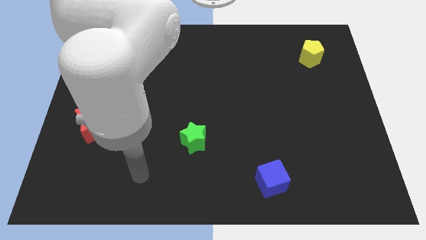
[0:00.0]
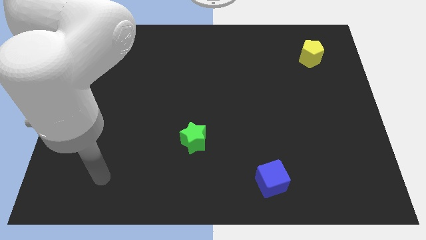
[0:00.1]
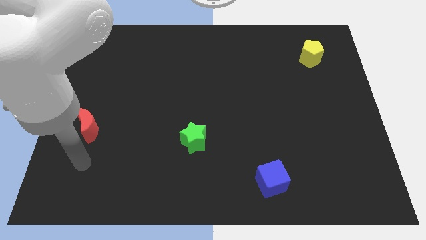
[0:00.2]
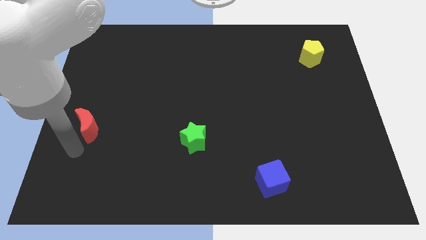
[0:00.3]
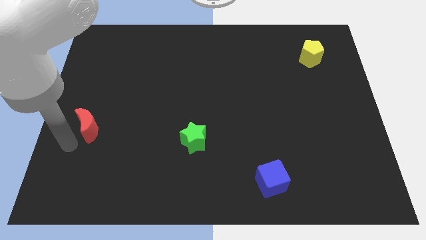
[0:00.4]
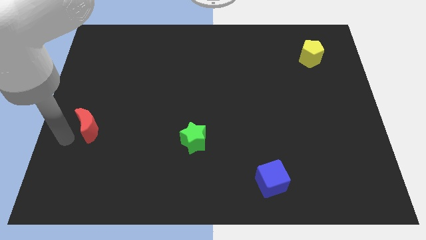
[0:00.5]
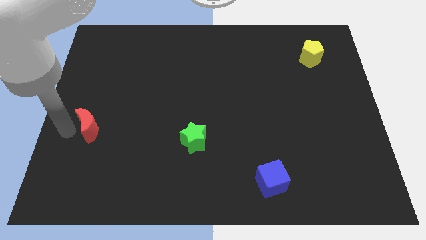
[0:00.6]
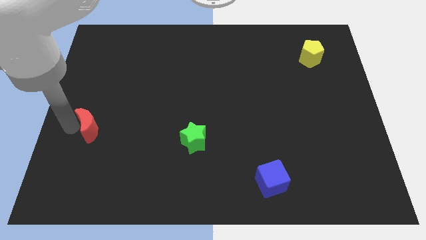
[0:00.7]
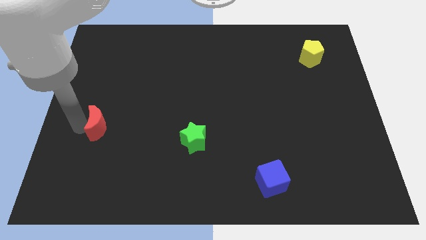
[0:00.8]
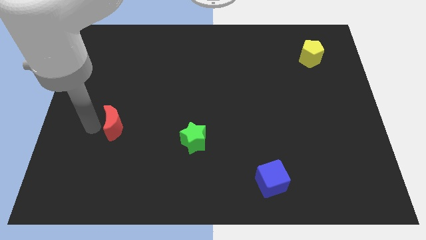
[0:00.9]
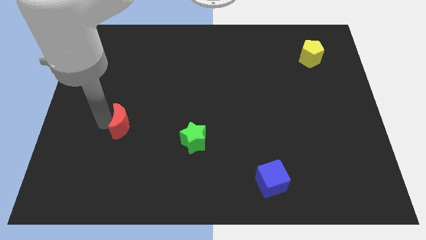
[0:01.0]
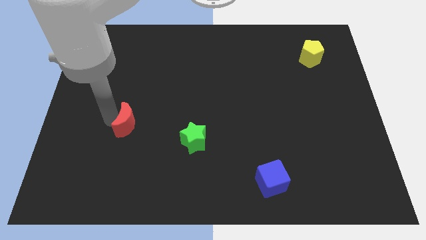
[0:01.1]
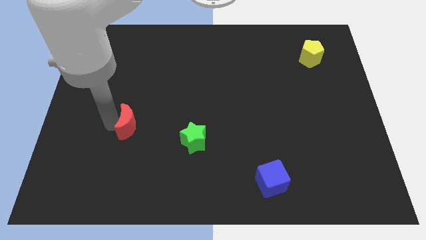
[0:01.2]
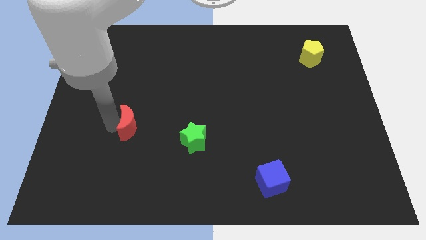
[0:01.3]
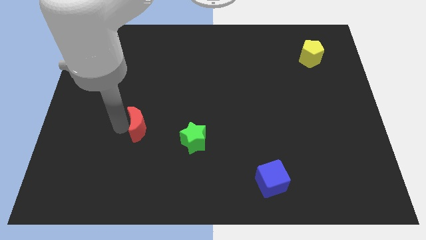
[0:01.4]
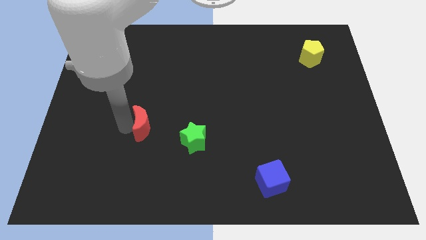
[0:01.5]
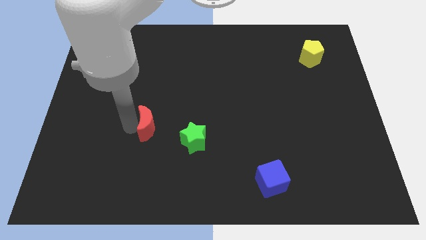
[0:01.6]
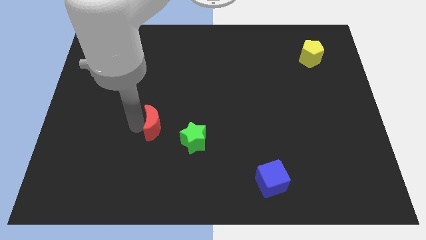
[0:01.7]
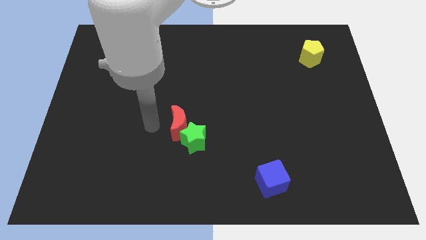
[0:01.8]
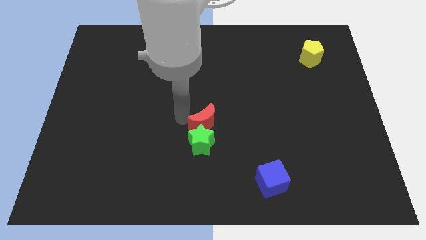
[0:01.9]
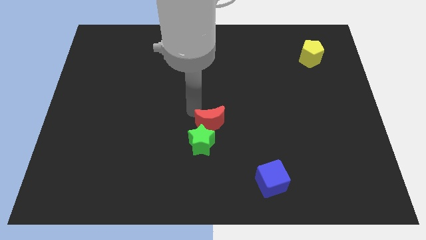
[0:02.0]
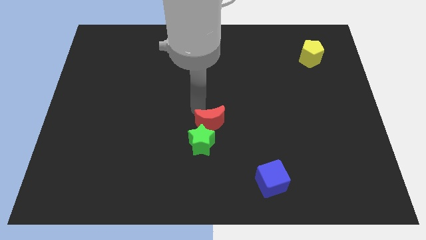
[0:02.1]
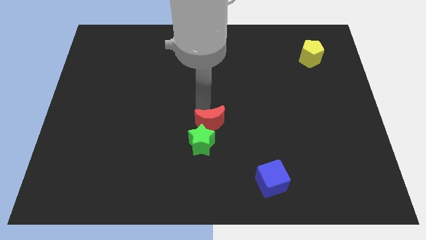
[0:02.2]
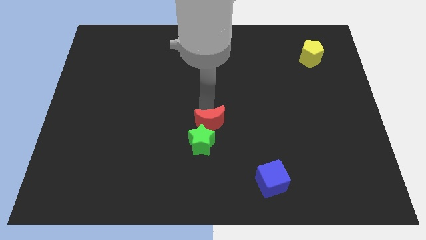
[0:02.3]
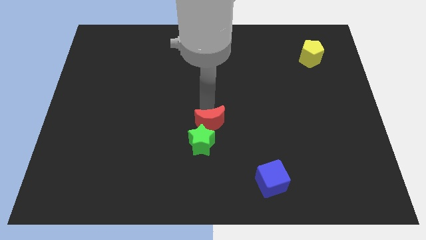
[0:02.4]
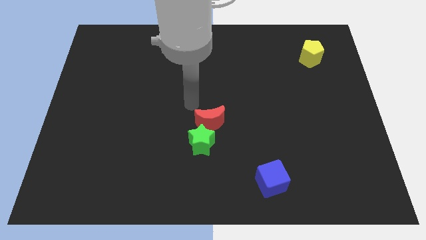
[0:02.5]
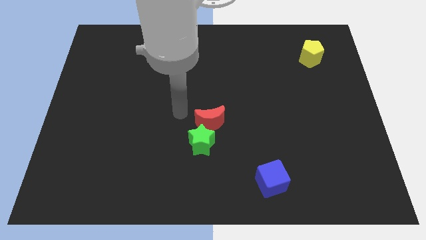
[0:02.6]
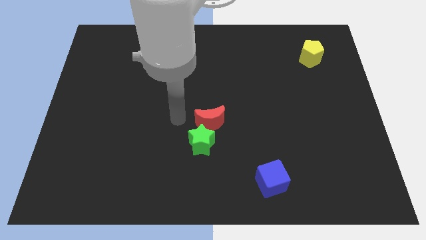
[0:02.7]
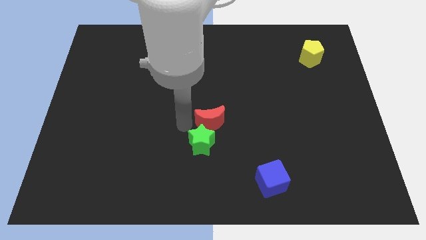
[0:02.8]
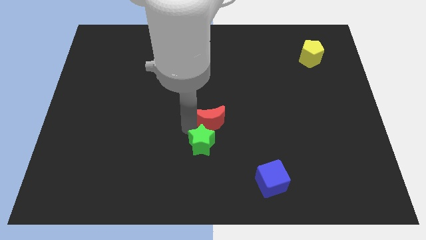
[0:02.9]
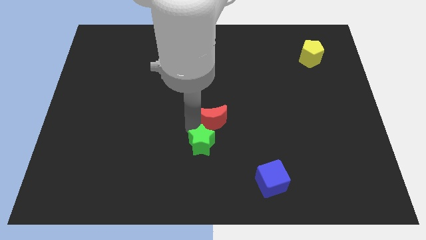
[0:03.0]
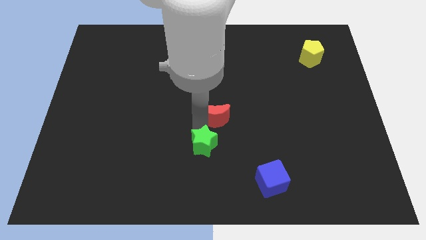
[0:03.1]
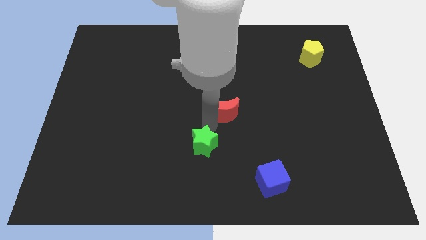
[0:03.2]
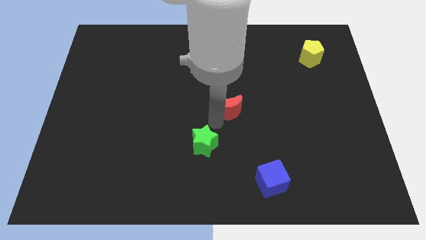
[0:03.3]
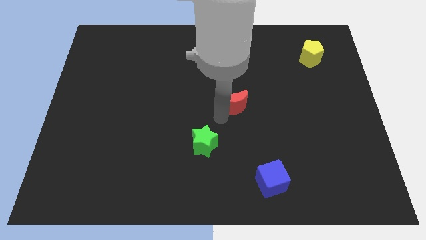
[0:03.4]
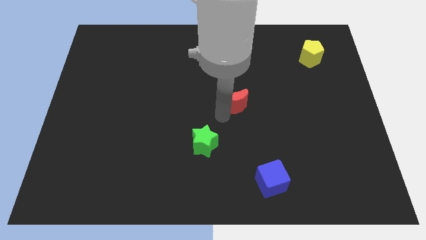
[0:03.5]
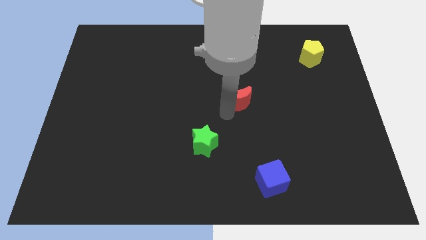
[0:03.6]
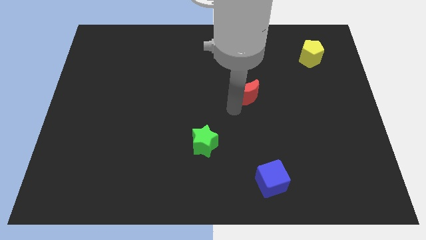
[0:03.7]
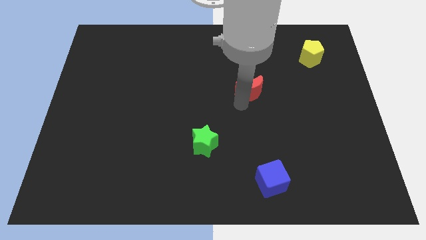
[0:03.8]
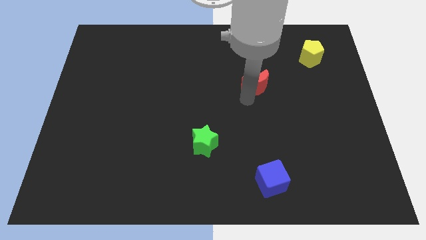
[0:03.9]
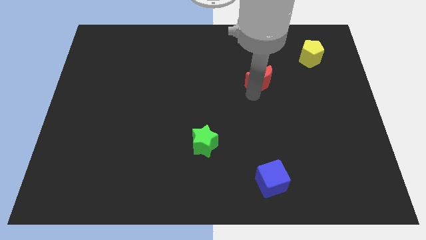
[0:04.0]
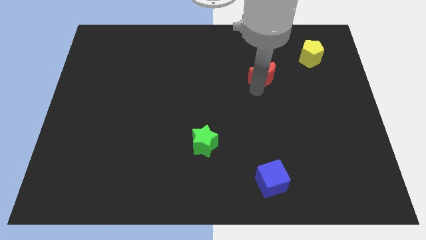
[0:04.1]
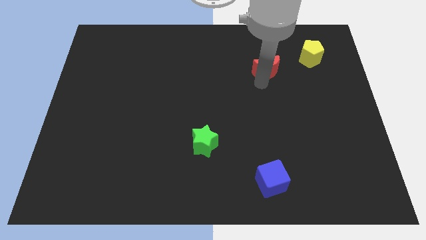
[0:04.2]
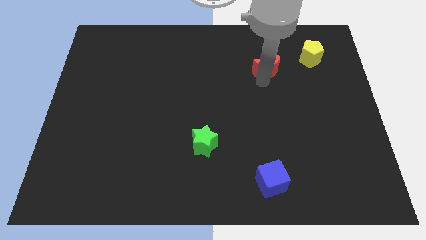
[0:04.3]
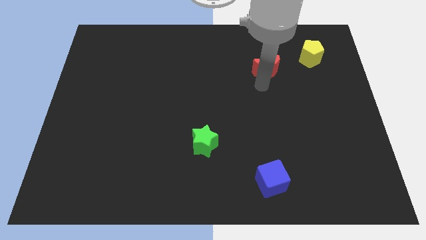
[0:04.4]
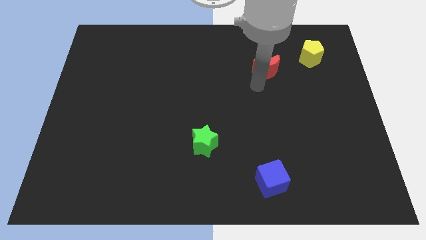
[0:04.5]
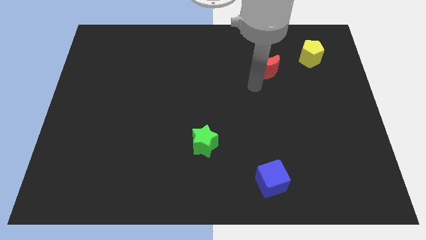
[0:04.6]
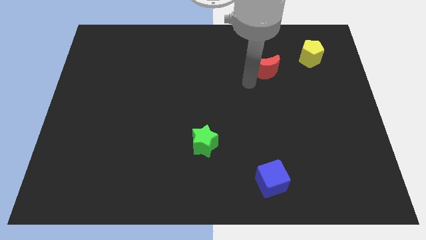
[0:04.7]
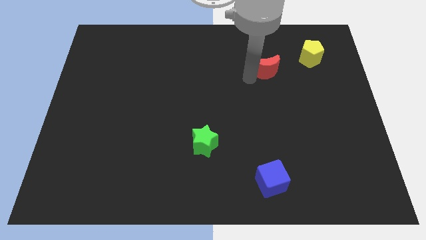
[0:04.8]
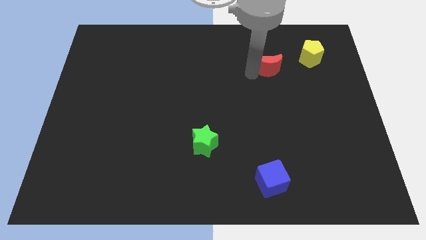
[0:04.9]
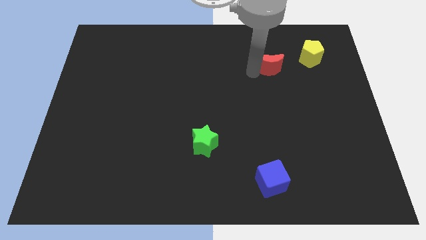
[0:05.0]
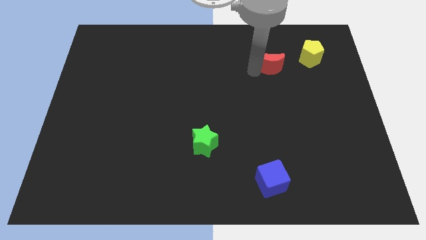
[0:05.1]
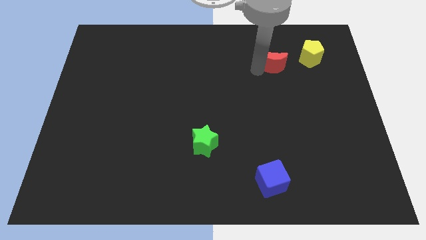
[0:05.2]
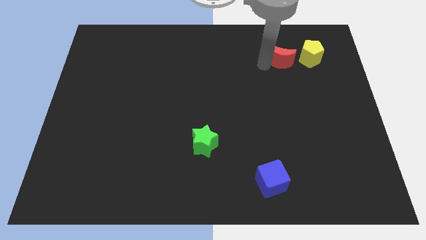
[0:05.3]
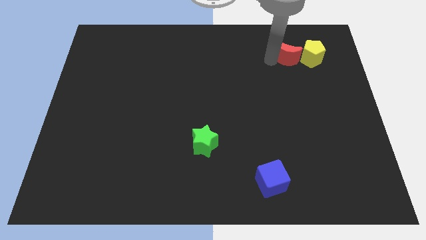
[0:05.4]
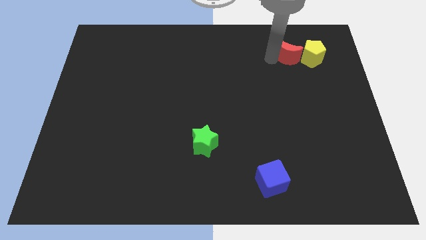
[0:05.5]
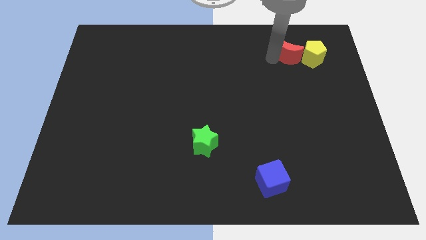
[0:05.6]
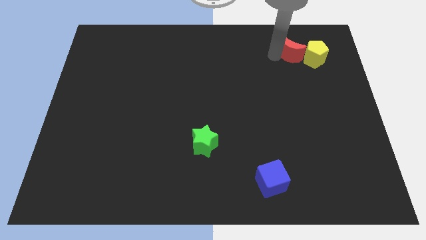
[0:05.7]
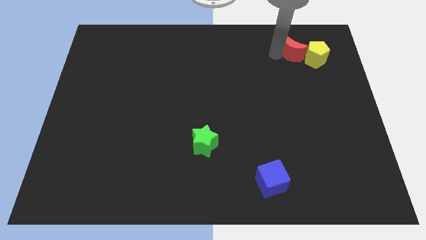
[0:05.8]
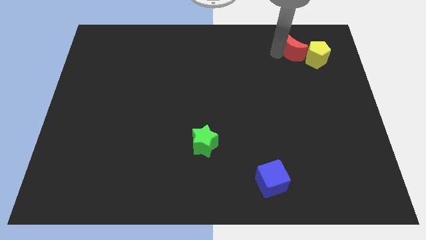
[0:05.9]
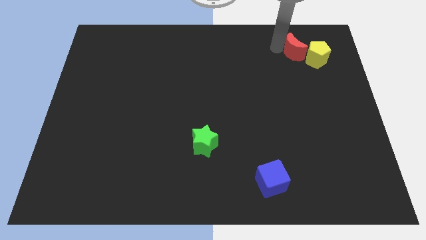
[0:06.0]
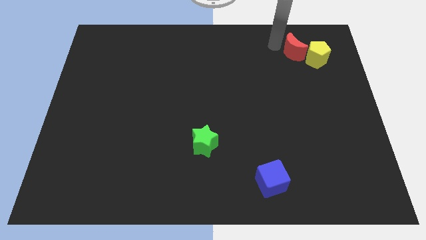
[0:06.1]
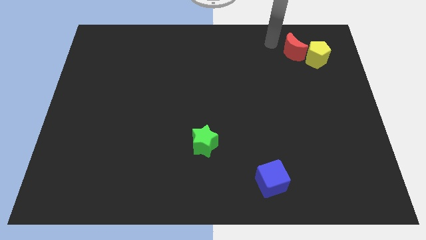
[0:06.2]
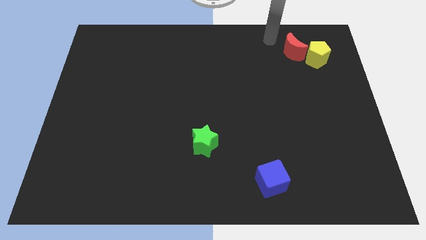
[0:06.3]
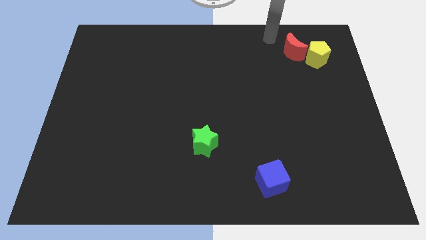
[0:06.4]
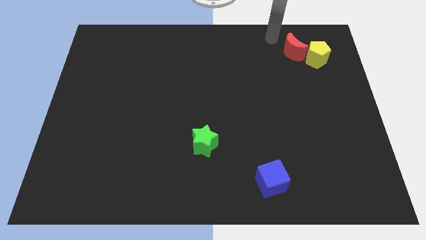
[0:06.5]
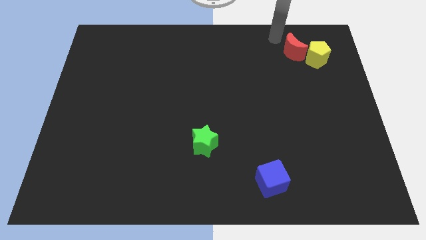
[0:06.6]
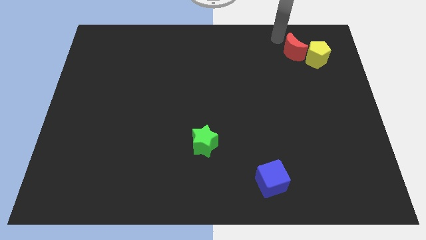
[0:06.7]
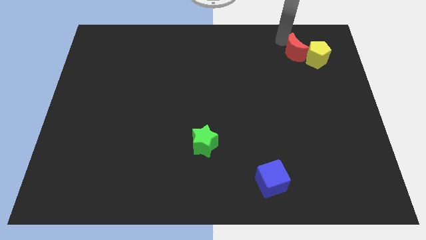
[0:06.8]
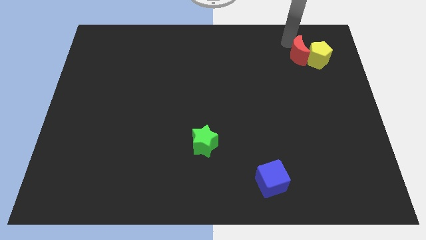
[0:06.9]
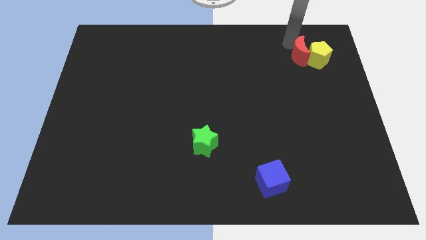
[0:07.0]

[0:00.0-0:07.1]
push the moon towards the yellow pentagon

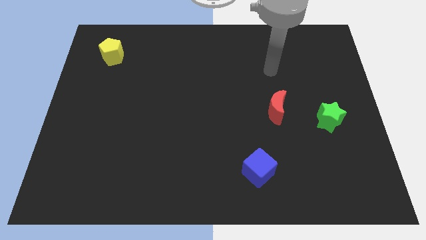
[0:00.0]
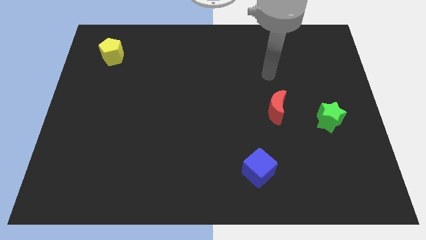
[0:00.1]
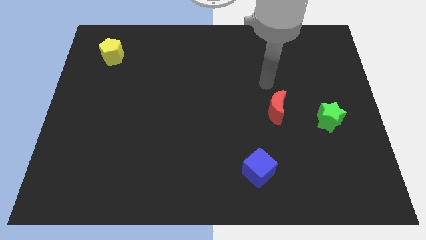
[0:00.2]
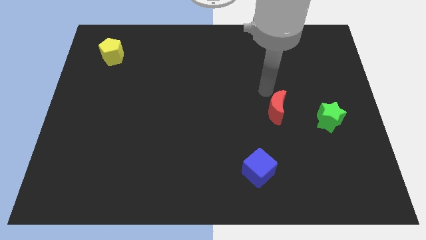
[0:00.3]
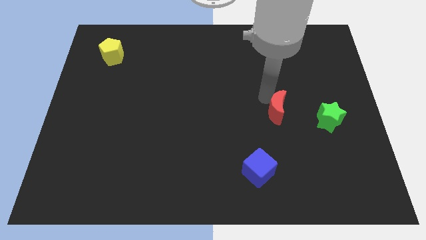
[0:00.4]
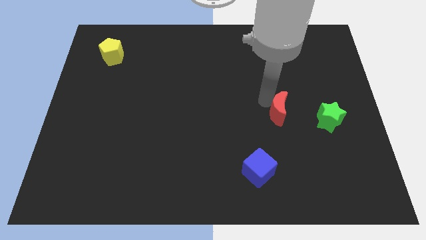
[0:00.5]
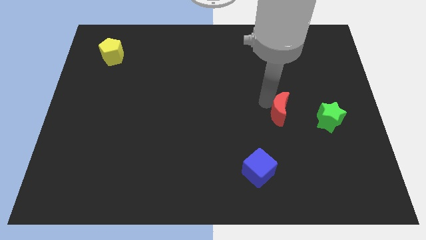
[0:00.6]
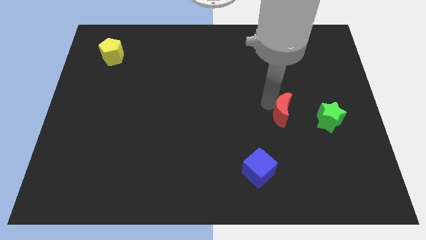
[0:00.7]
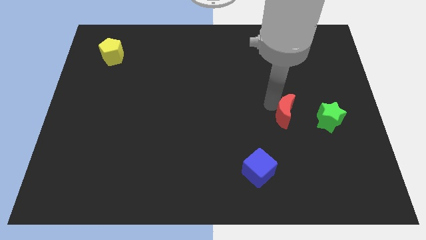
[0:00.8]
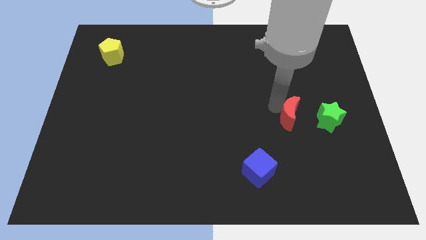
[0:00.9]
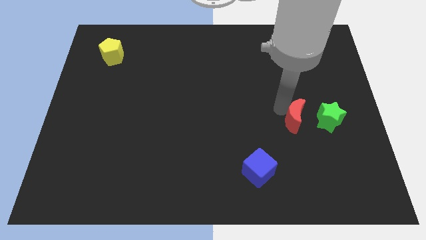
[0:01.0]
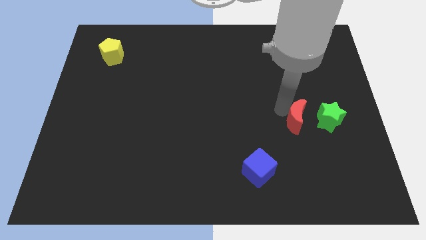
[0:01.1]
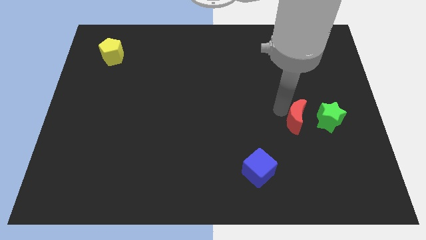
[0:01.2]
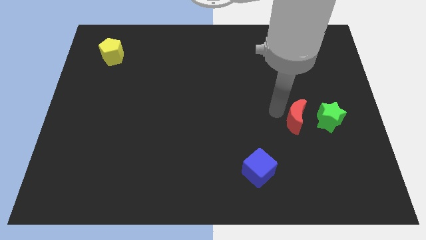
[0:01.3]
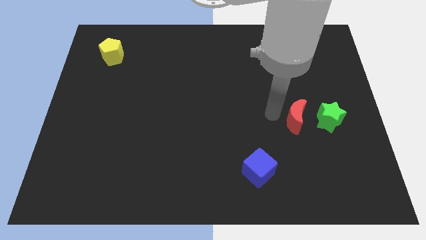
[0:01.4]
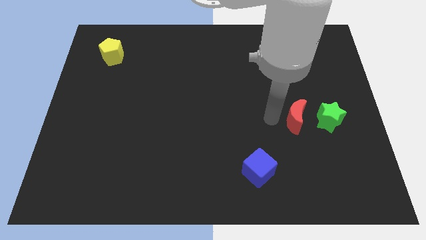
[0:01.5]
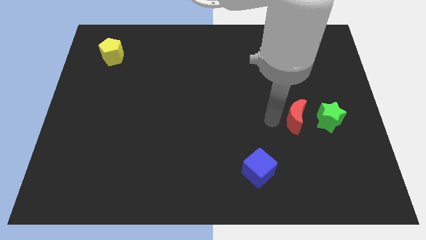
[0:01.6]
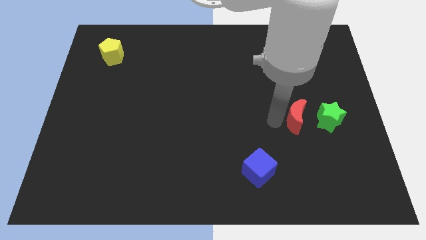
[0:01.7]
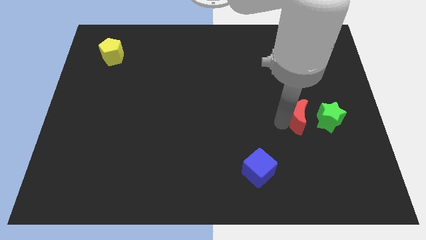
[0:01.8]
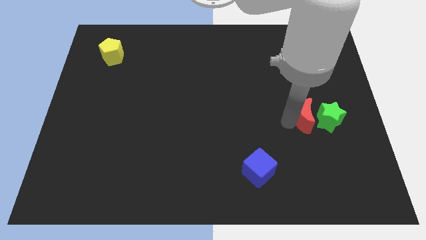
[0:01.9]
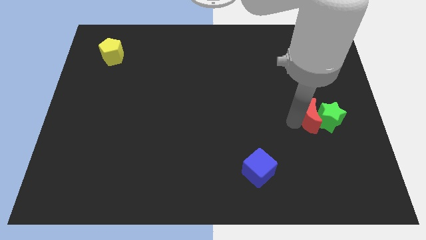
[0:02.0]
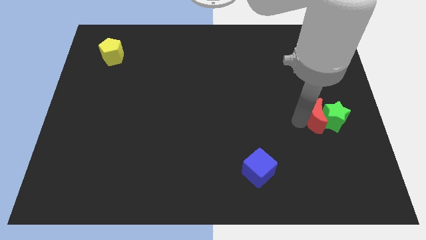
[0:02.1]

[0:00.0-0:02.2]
put the red block towards the green star
